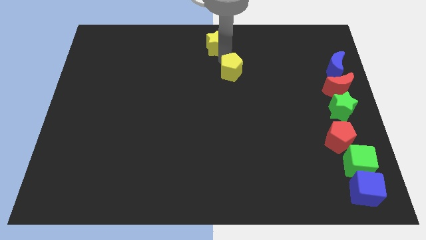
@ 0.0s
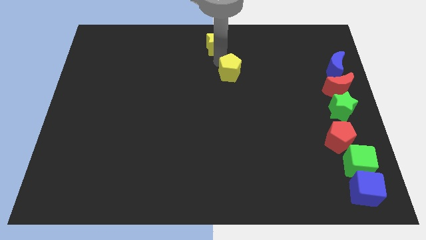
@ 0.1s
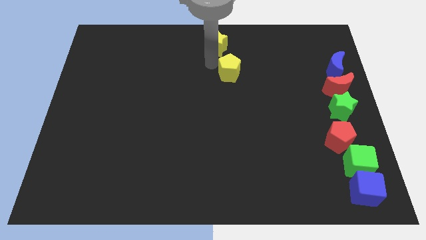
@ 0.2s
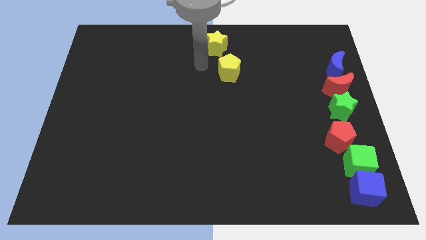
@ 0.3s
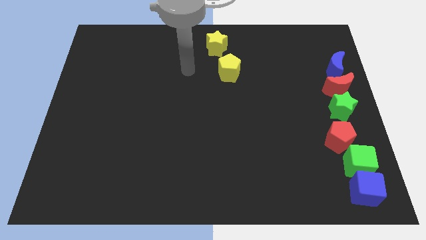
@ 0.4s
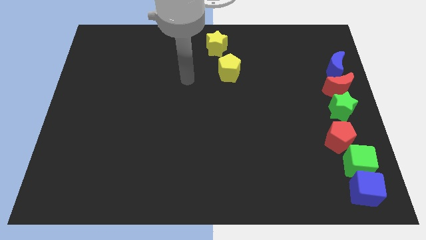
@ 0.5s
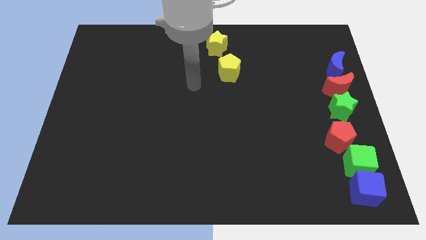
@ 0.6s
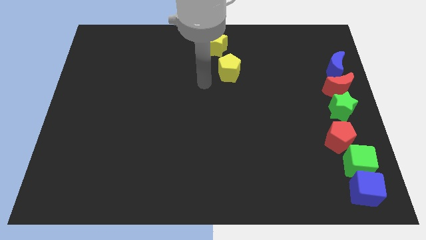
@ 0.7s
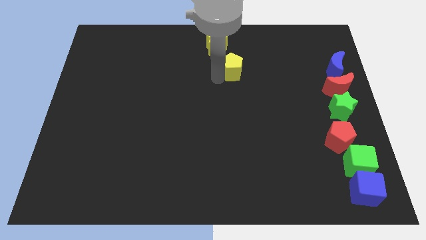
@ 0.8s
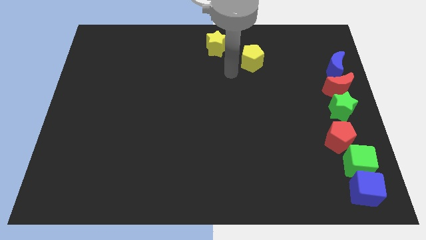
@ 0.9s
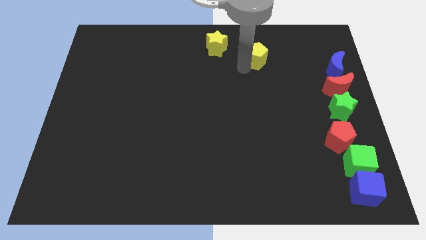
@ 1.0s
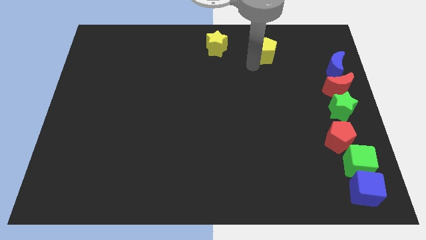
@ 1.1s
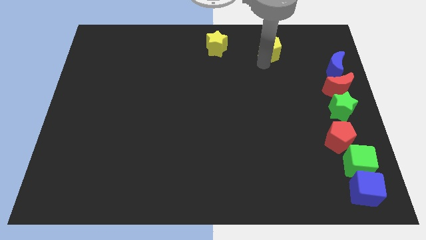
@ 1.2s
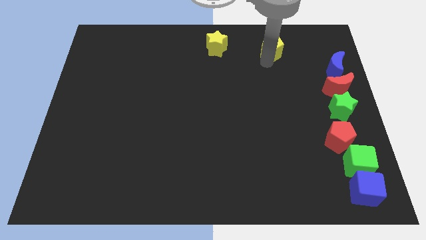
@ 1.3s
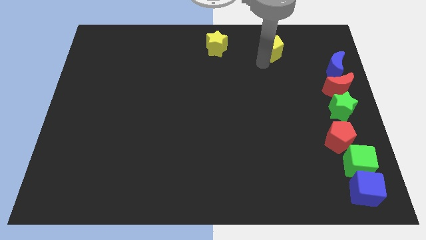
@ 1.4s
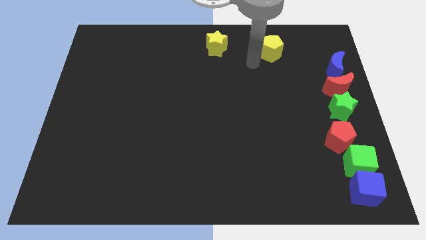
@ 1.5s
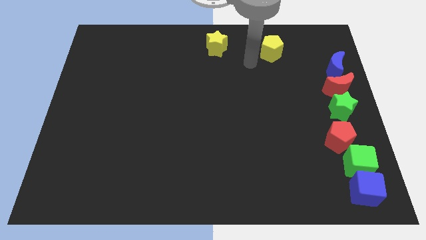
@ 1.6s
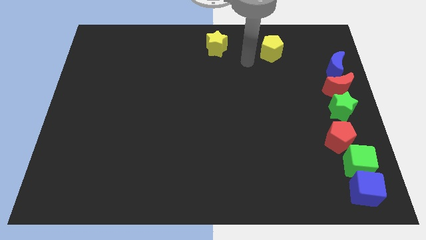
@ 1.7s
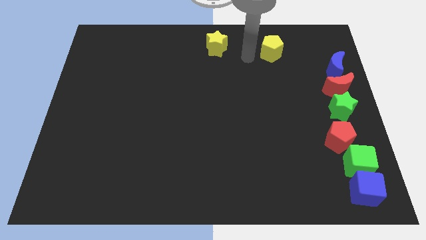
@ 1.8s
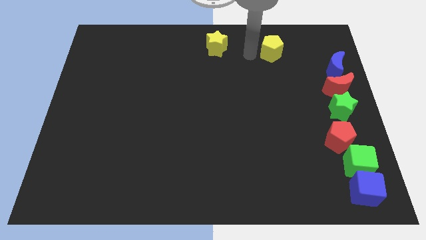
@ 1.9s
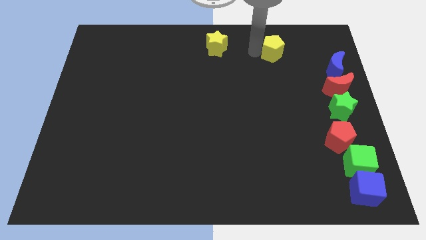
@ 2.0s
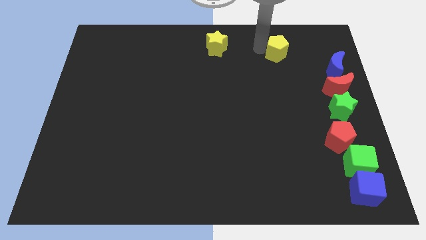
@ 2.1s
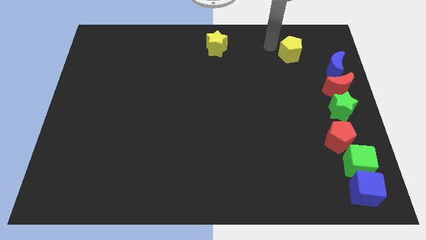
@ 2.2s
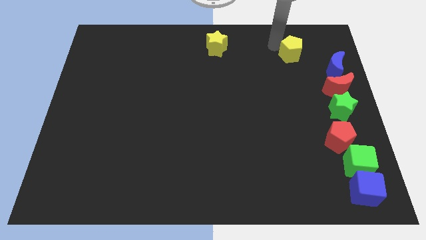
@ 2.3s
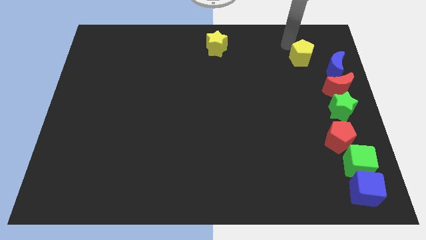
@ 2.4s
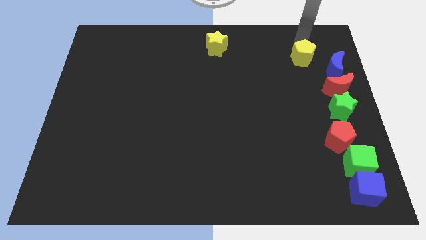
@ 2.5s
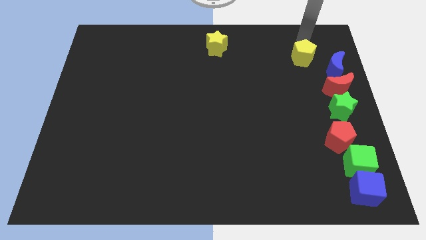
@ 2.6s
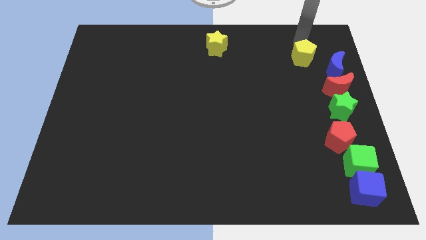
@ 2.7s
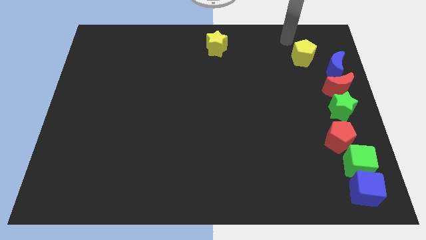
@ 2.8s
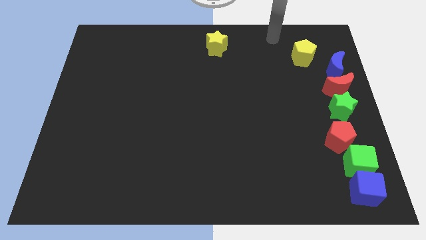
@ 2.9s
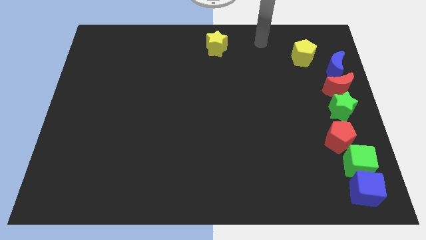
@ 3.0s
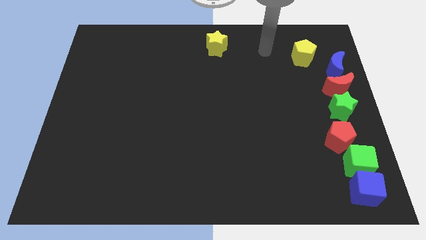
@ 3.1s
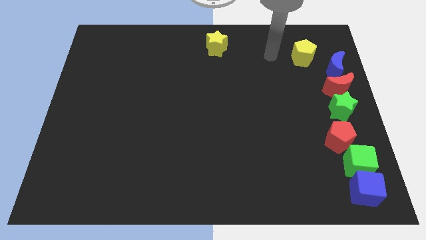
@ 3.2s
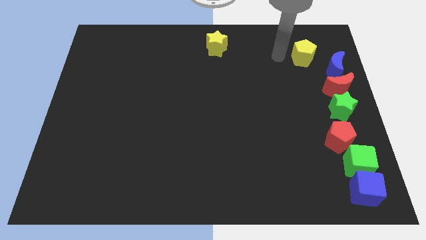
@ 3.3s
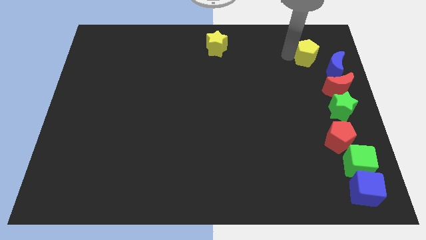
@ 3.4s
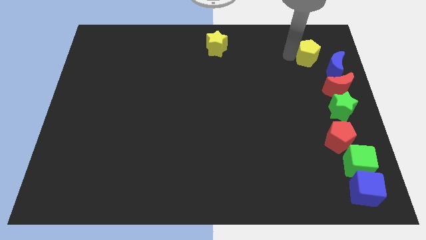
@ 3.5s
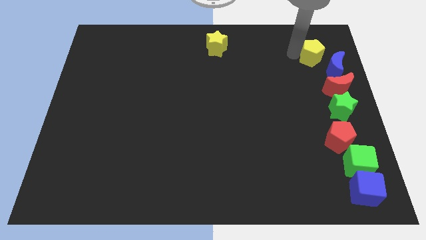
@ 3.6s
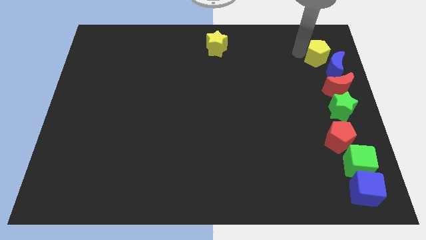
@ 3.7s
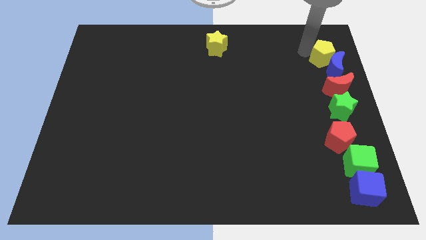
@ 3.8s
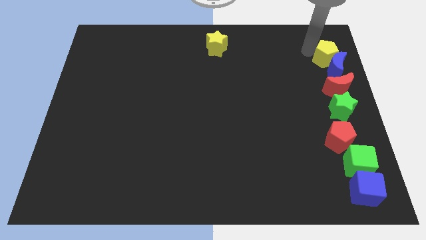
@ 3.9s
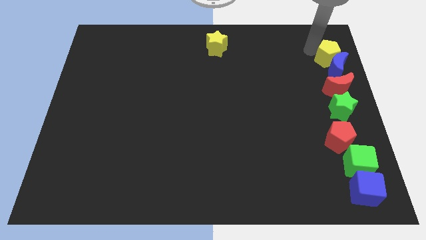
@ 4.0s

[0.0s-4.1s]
push the yellow pentagon into the blue moon

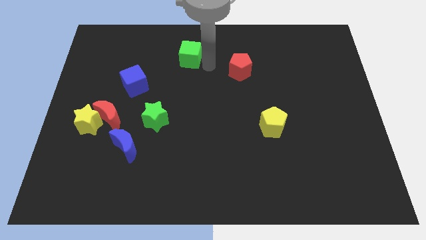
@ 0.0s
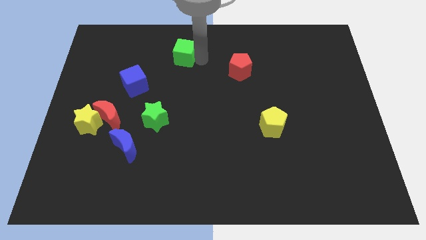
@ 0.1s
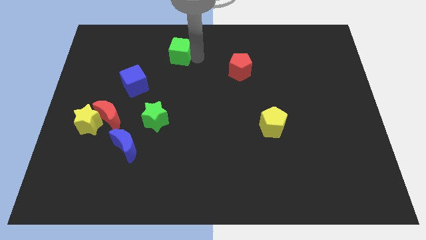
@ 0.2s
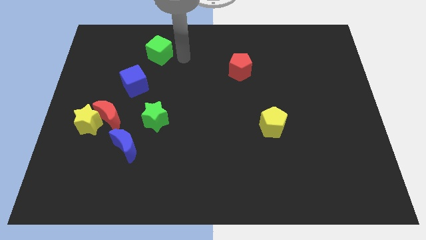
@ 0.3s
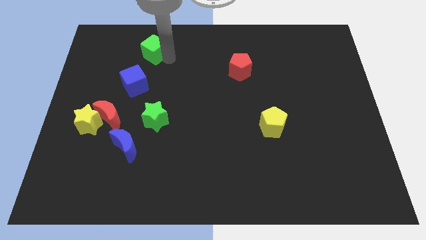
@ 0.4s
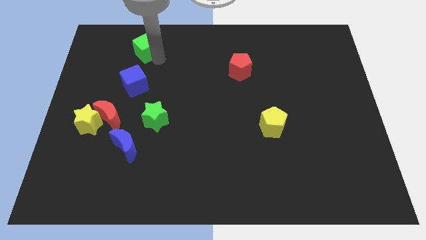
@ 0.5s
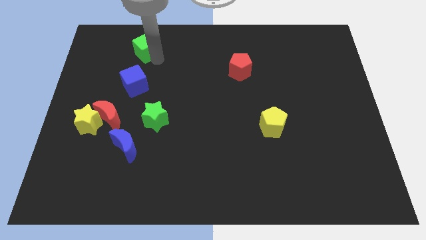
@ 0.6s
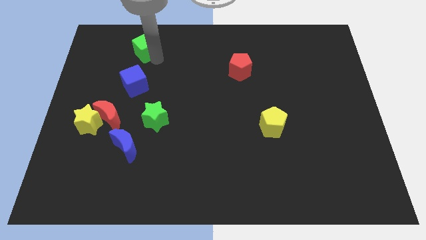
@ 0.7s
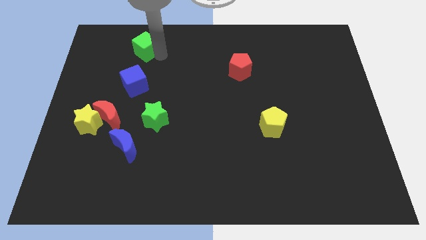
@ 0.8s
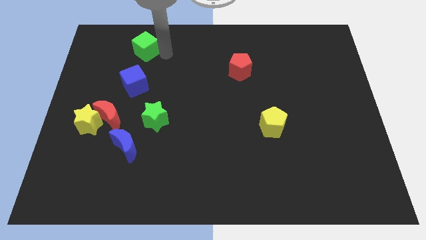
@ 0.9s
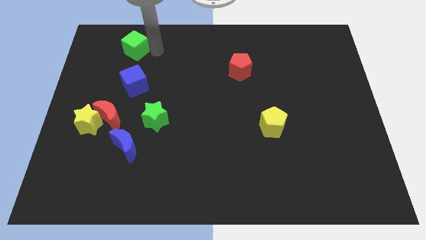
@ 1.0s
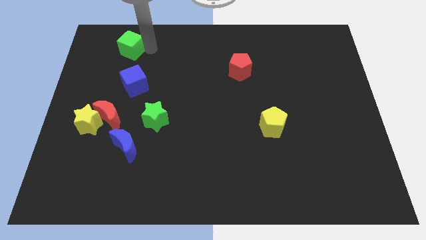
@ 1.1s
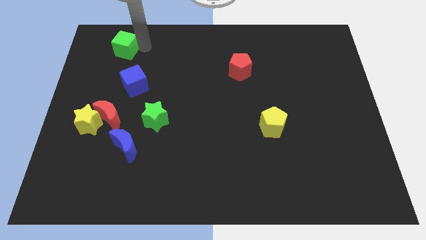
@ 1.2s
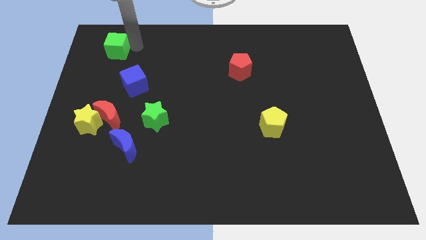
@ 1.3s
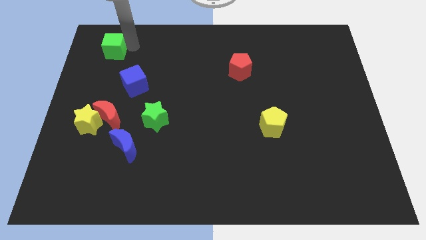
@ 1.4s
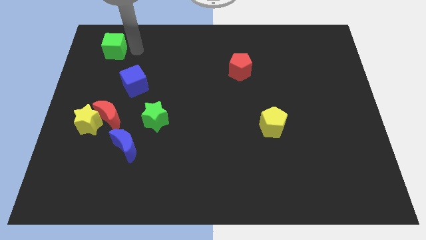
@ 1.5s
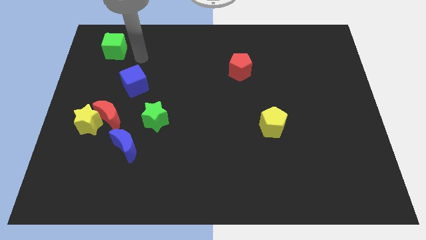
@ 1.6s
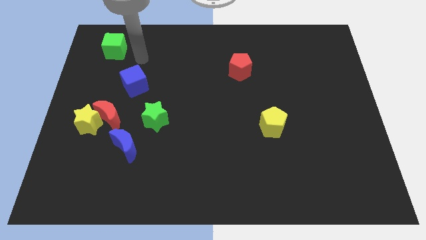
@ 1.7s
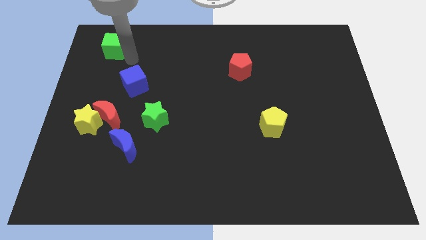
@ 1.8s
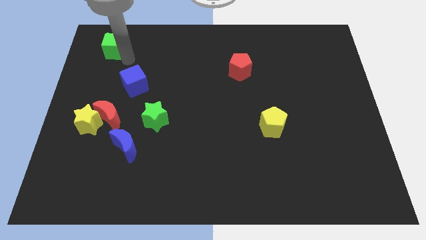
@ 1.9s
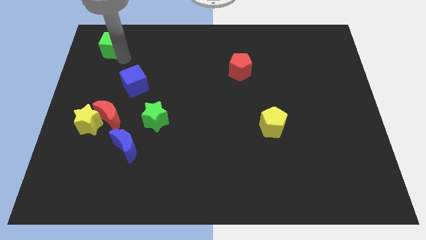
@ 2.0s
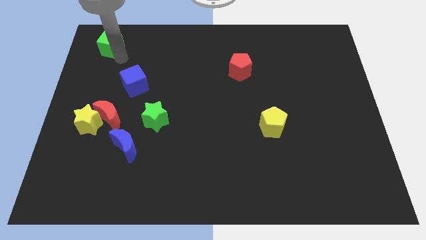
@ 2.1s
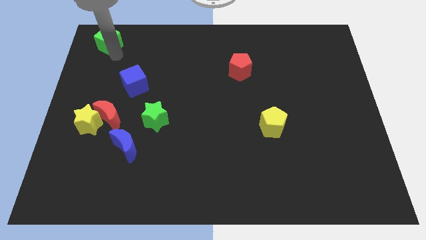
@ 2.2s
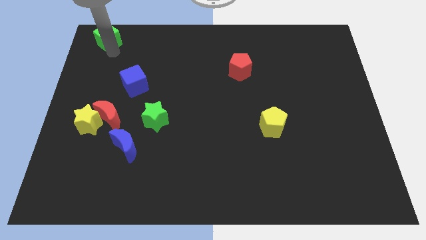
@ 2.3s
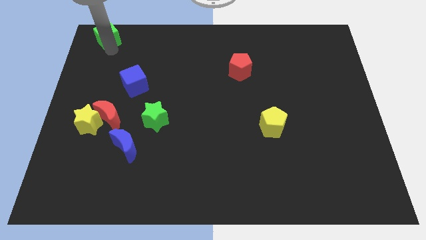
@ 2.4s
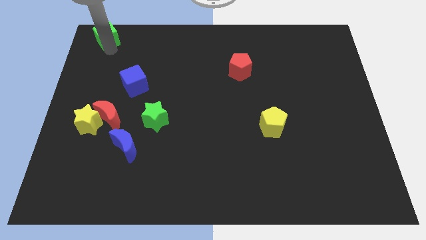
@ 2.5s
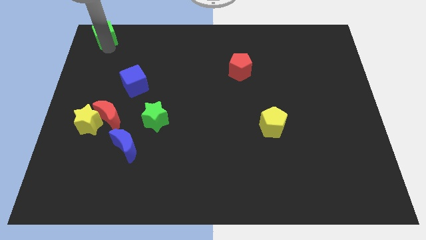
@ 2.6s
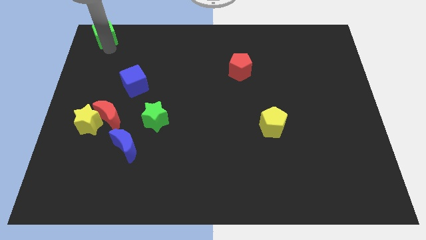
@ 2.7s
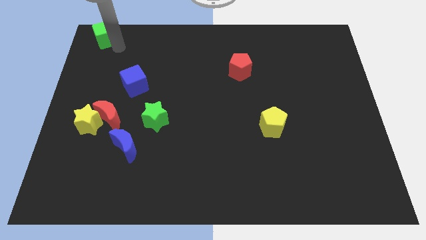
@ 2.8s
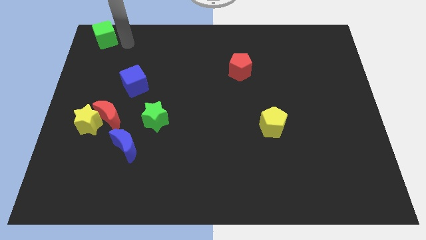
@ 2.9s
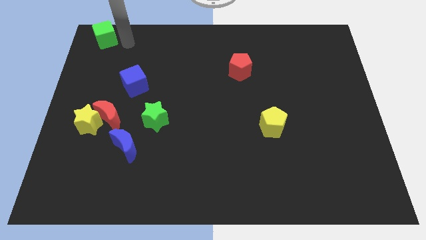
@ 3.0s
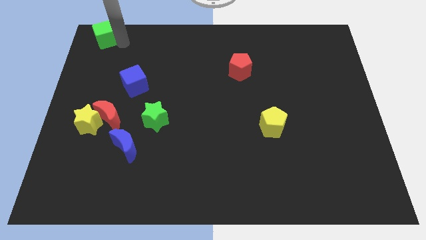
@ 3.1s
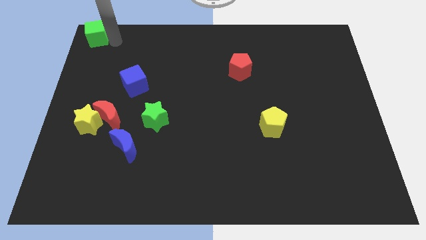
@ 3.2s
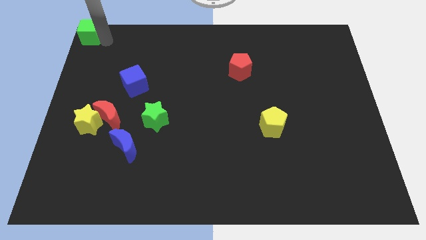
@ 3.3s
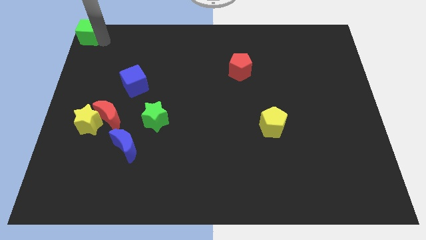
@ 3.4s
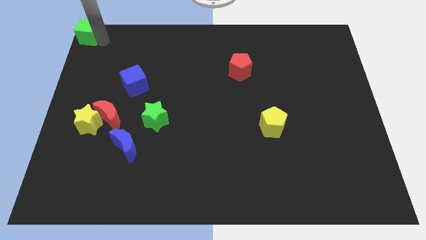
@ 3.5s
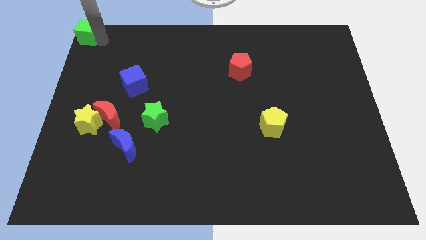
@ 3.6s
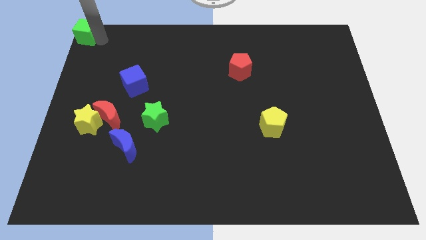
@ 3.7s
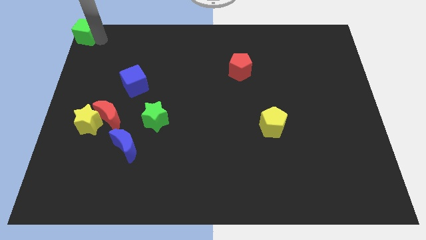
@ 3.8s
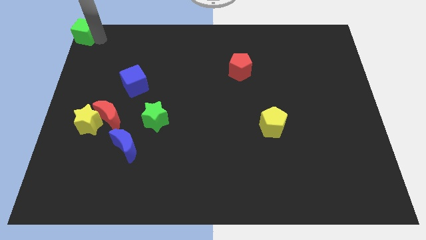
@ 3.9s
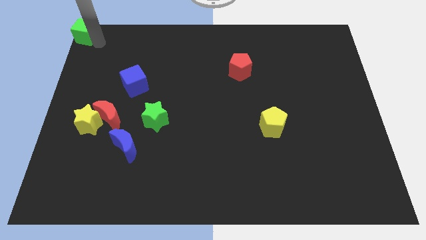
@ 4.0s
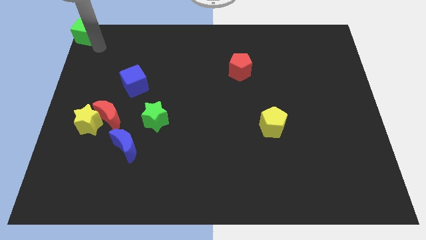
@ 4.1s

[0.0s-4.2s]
place the green cube at top left corner of the board

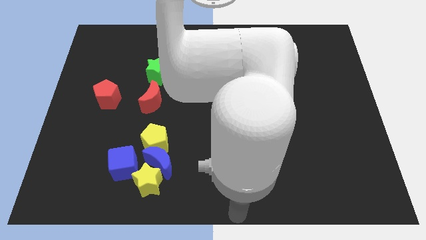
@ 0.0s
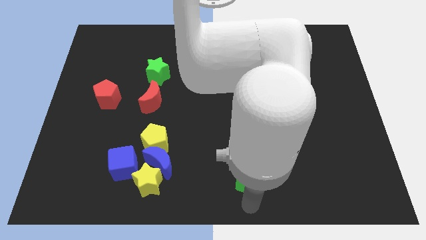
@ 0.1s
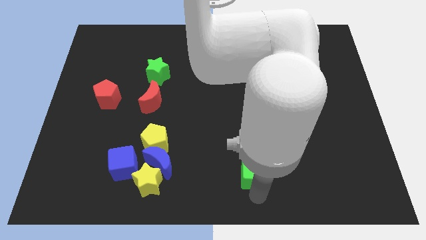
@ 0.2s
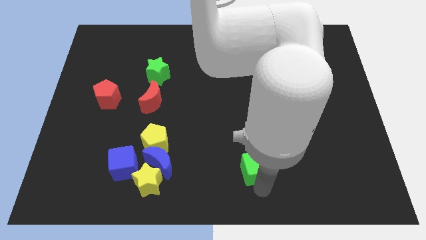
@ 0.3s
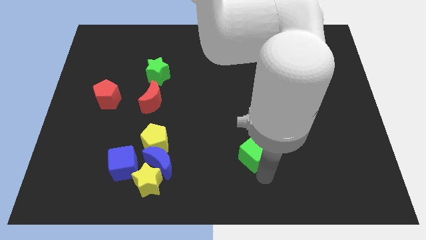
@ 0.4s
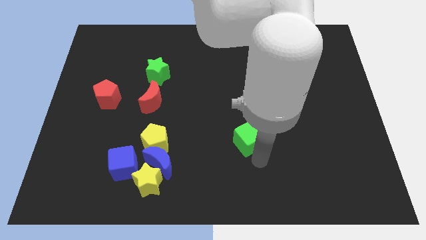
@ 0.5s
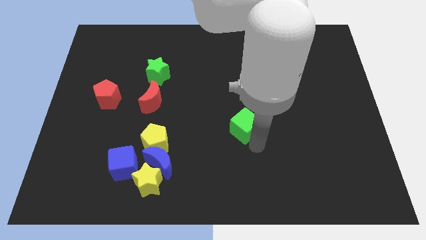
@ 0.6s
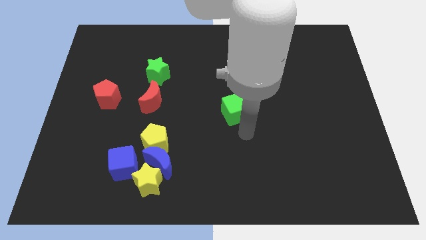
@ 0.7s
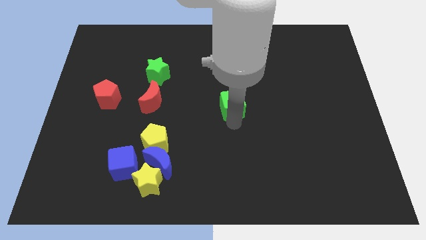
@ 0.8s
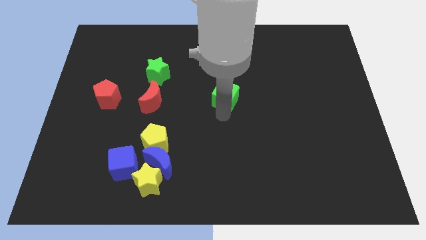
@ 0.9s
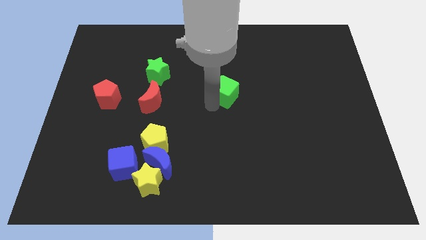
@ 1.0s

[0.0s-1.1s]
slide the green cube slightly towards up
